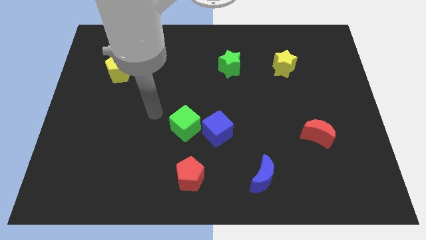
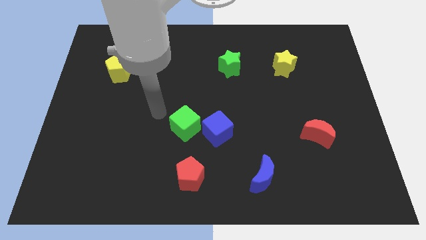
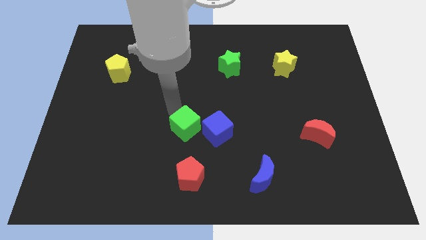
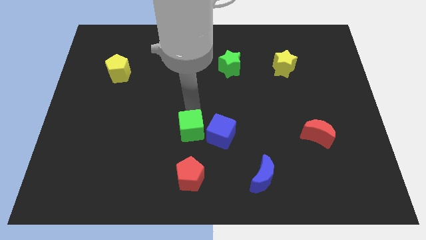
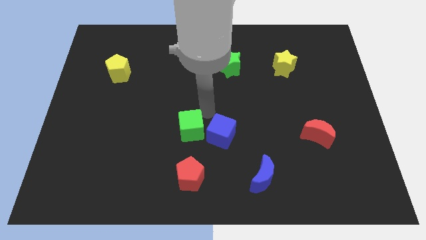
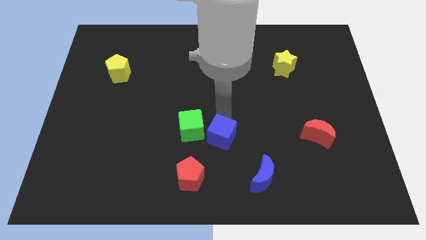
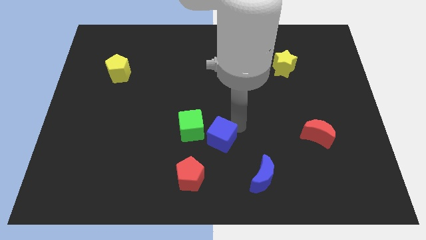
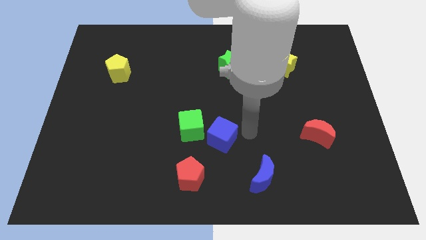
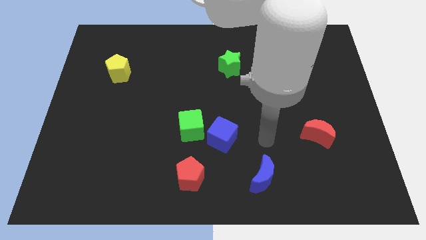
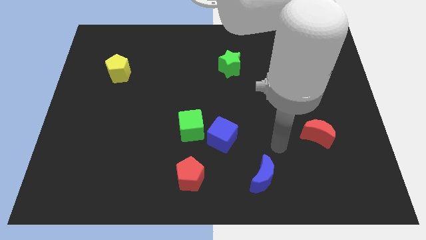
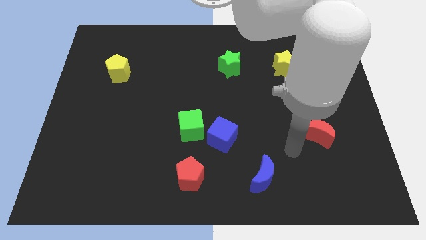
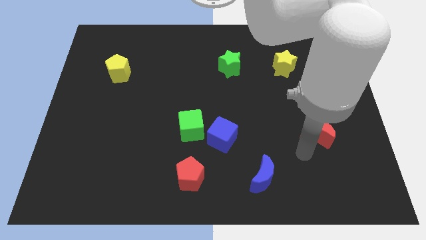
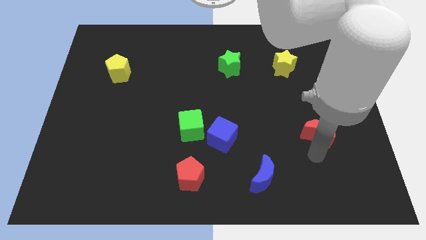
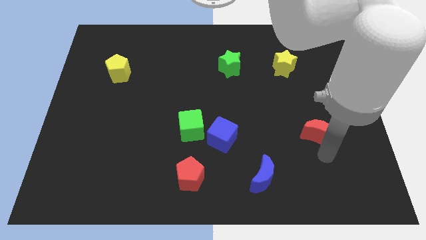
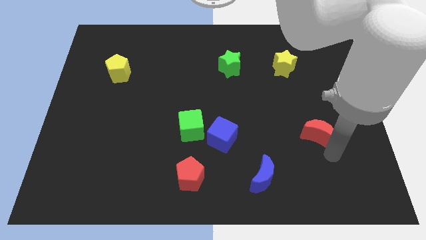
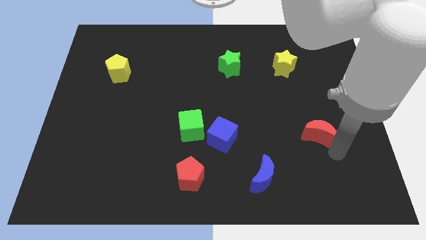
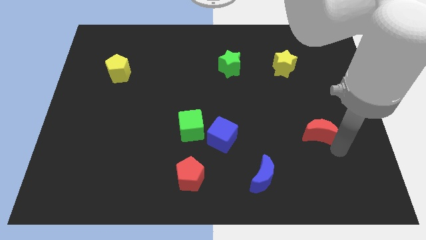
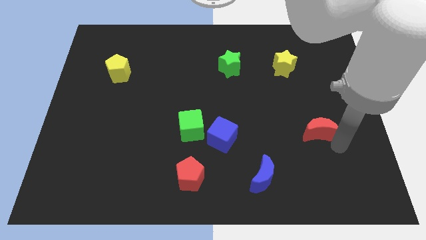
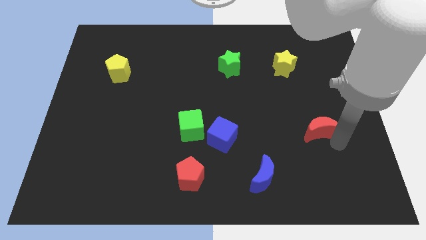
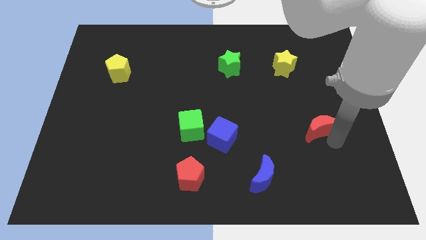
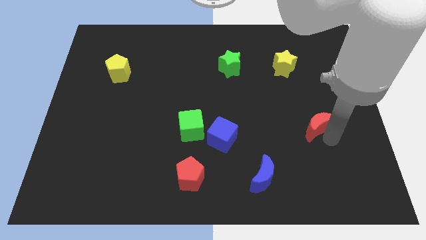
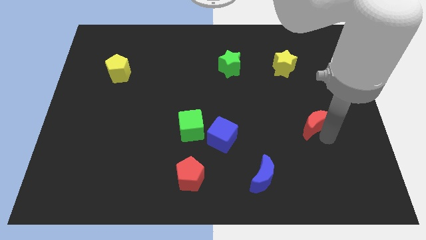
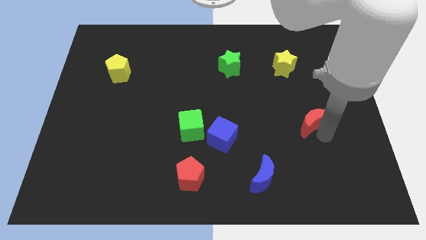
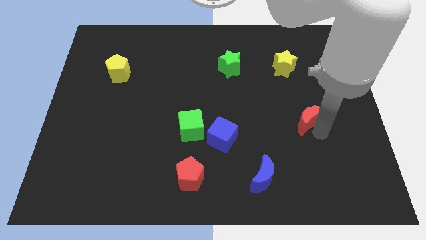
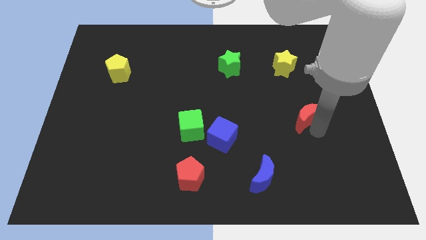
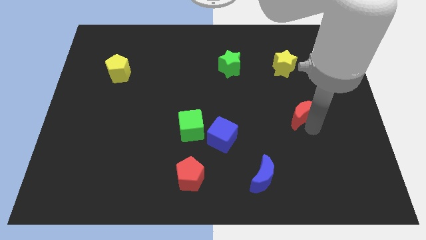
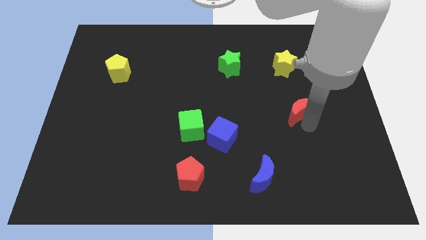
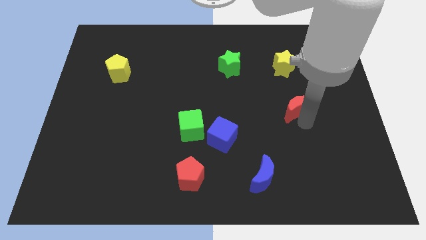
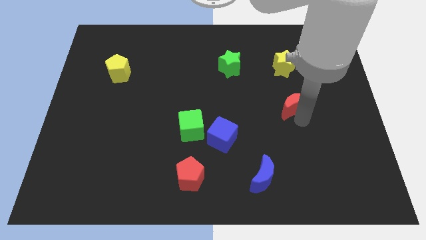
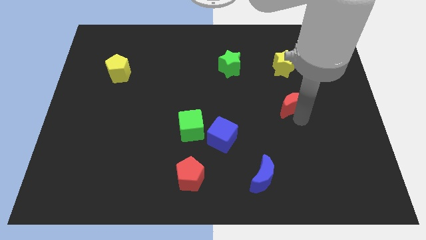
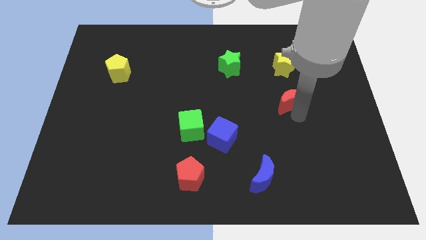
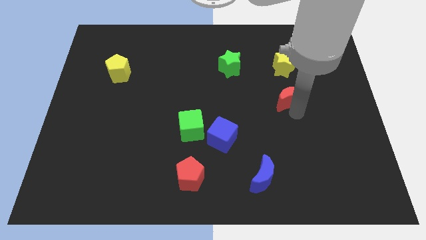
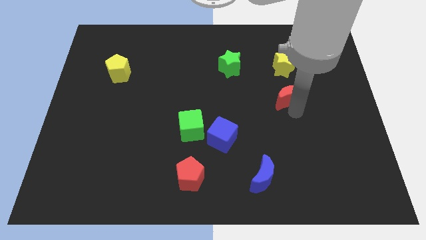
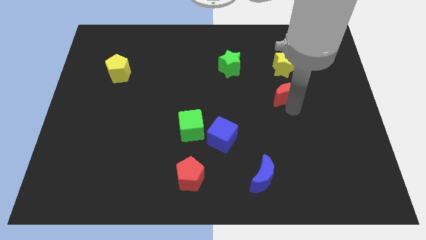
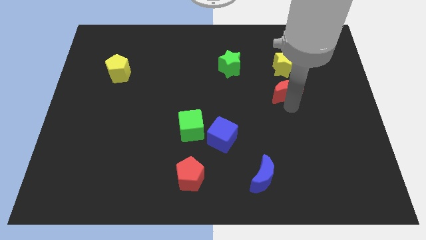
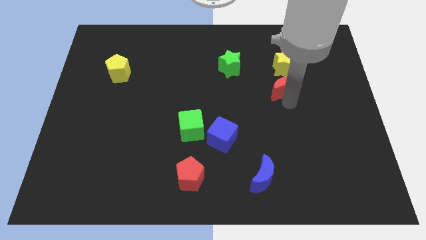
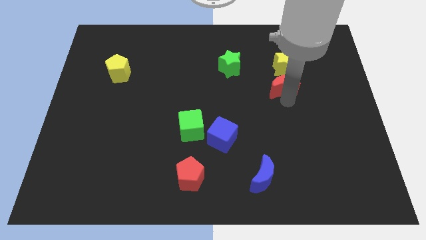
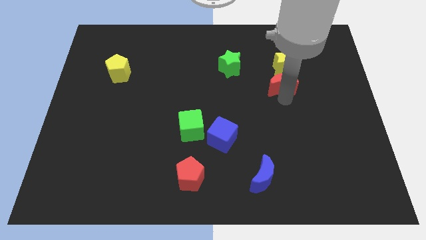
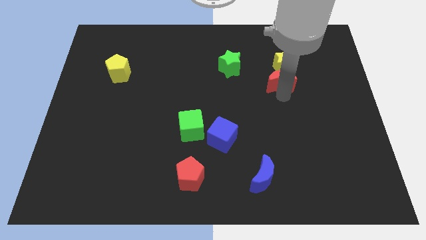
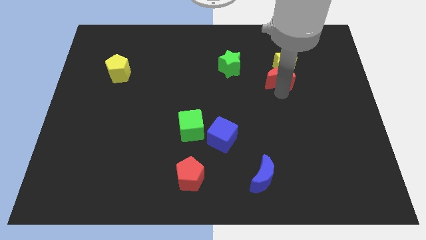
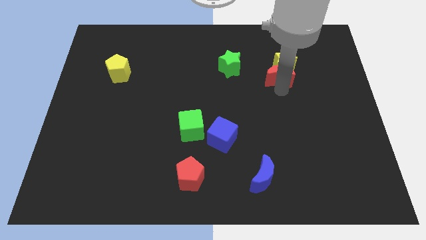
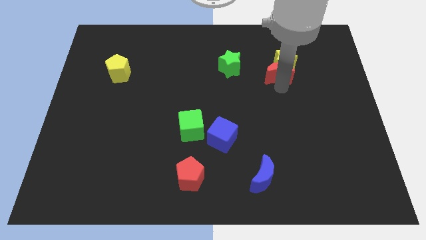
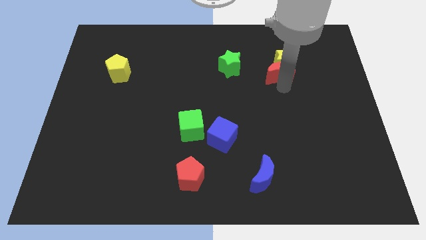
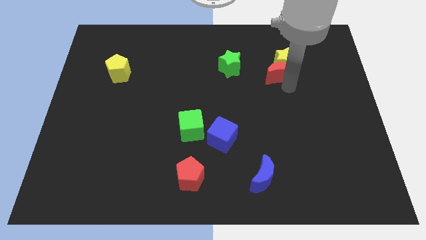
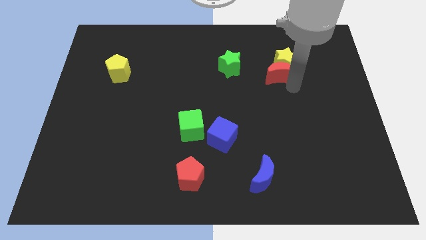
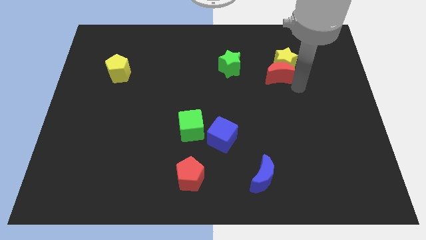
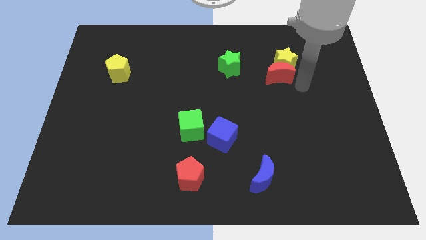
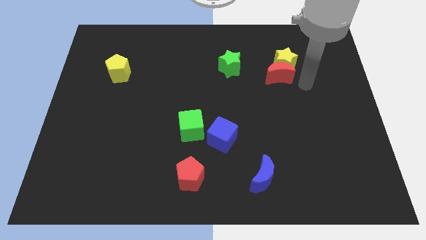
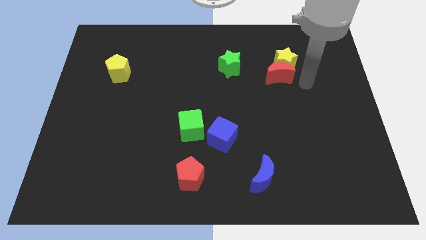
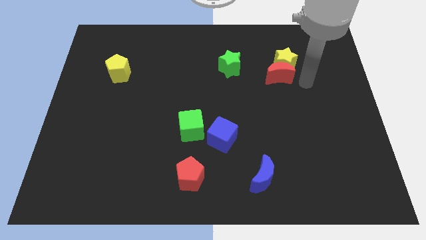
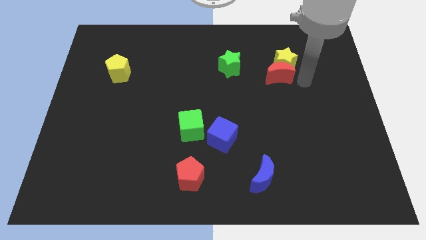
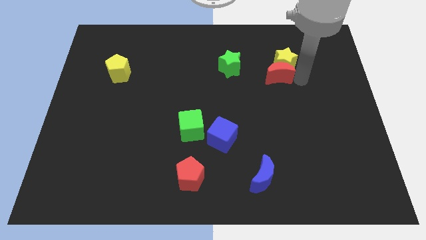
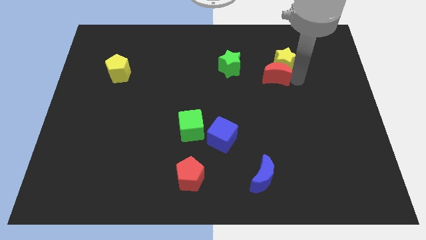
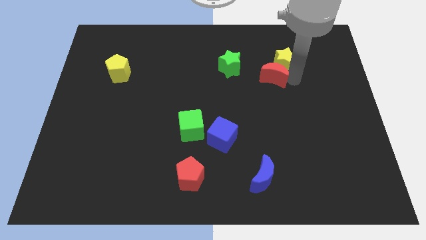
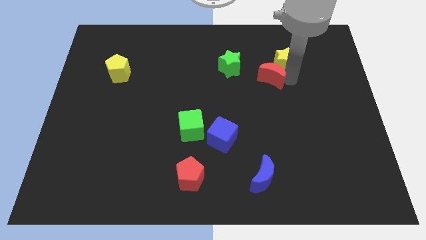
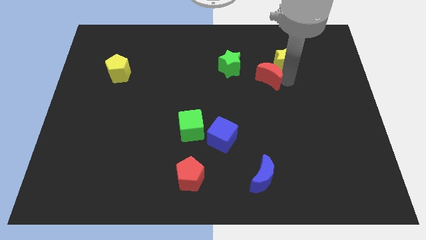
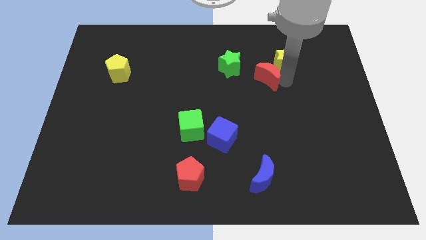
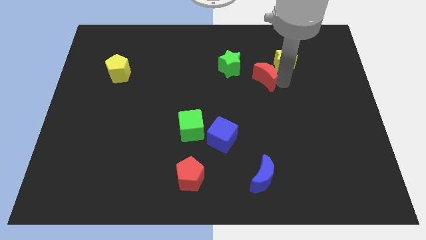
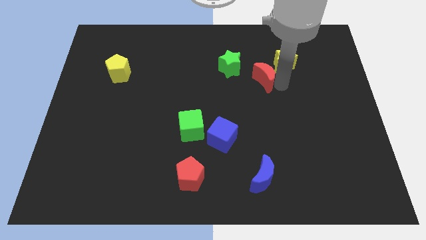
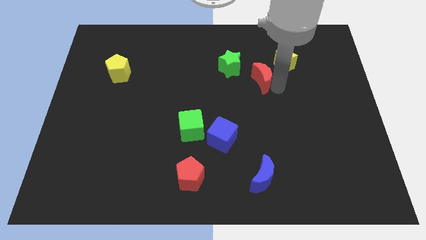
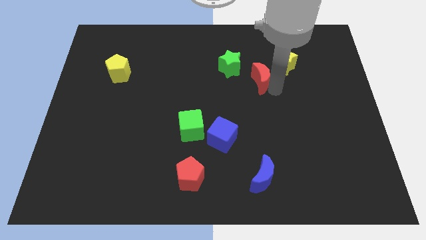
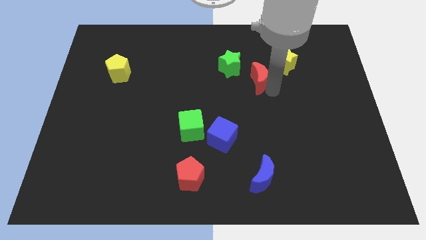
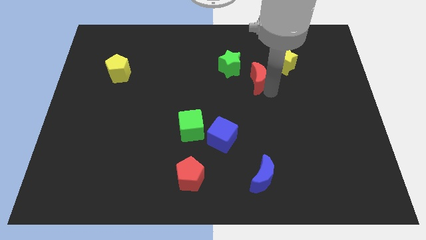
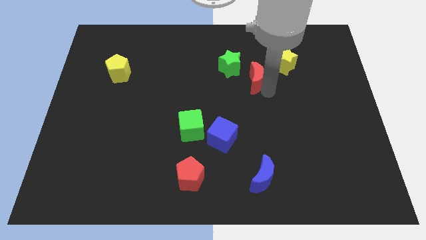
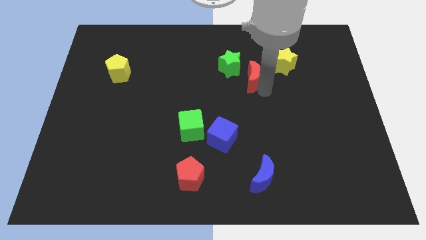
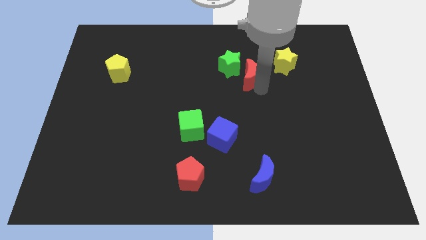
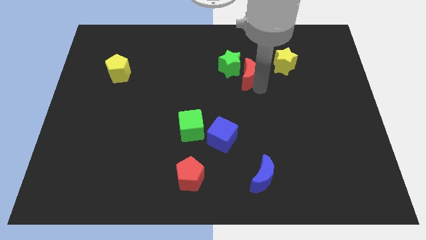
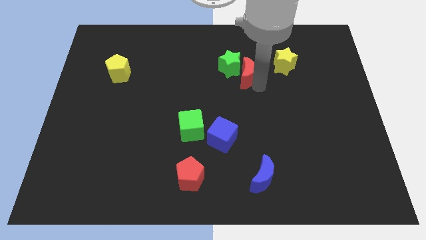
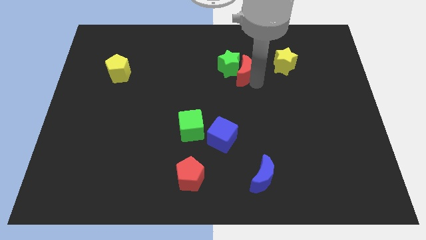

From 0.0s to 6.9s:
push the red moon next to the green star

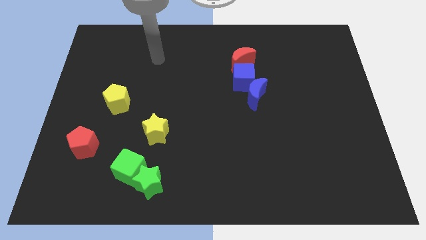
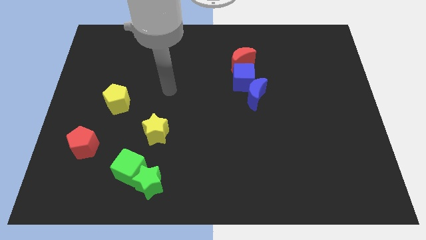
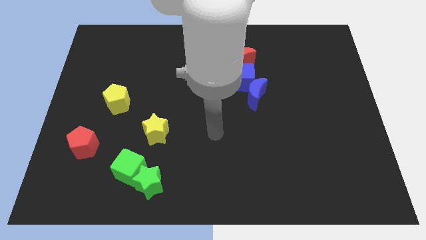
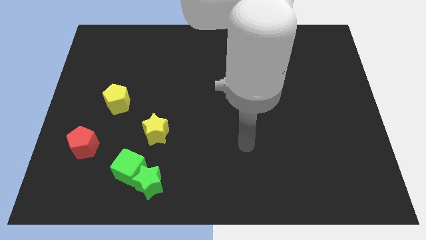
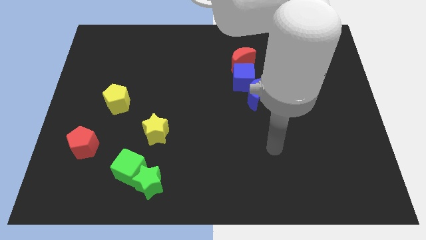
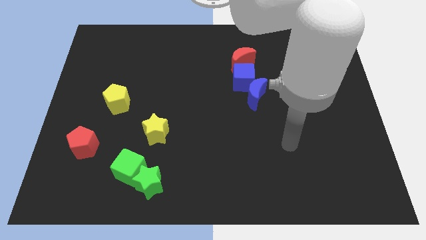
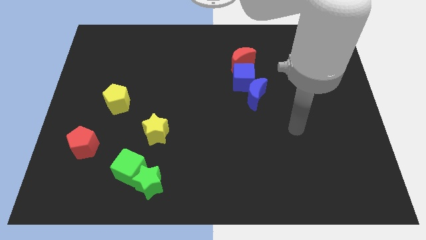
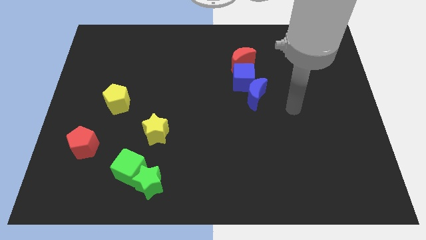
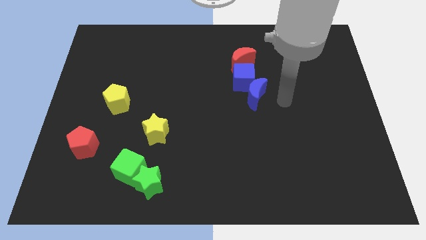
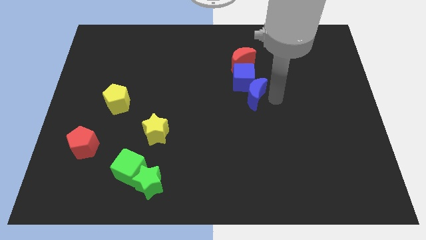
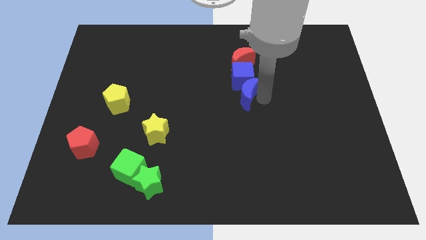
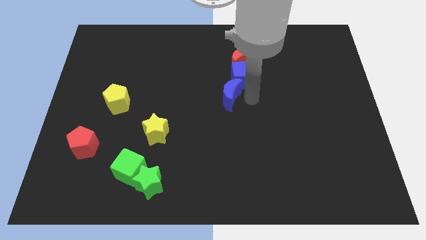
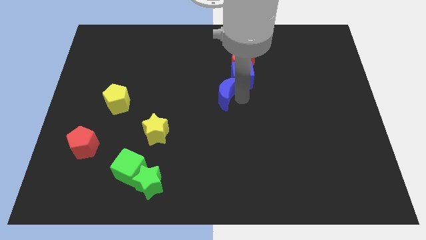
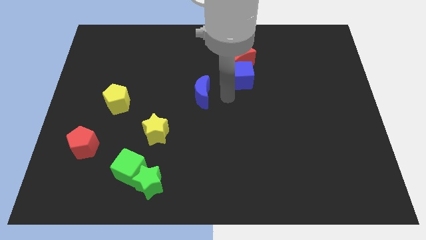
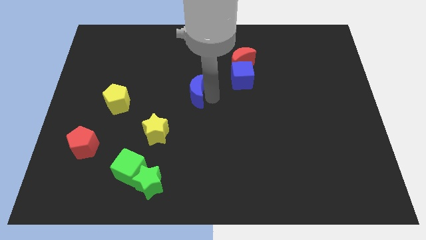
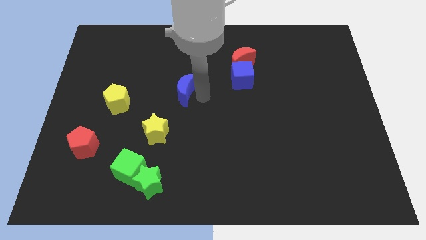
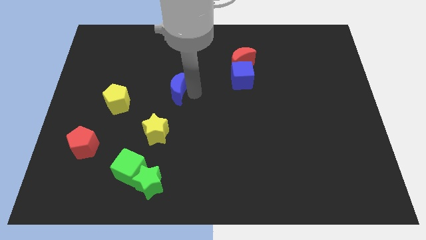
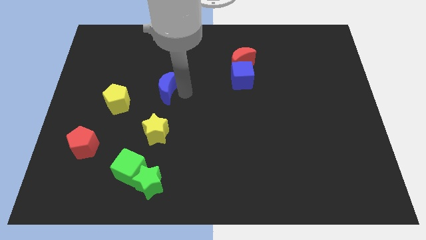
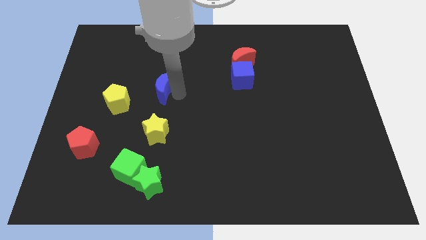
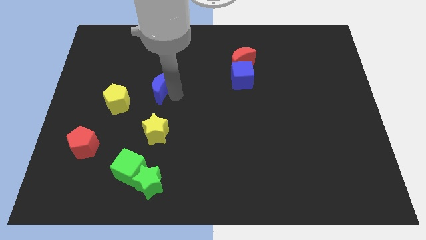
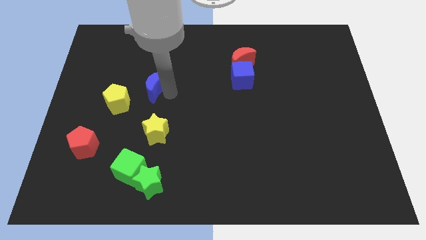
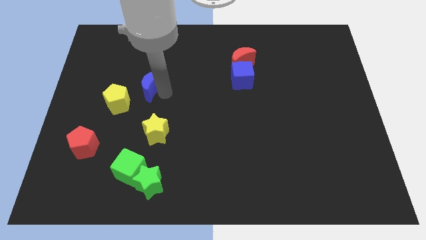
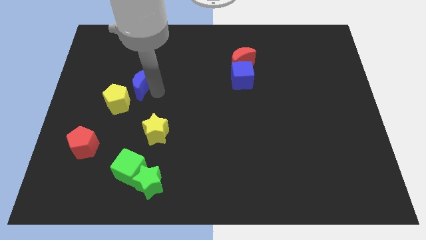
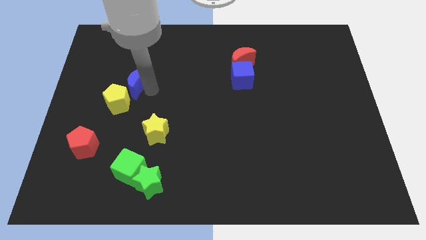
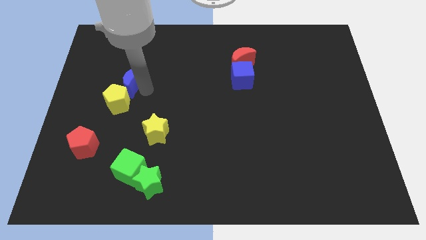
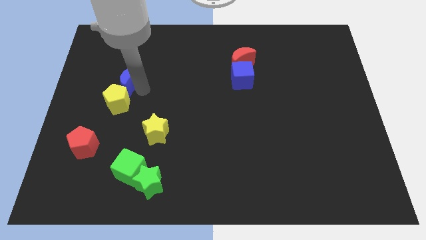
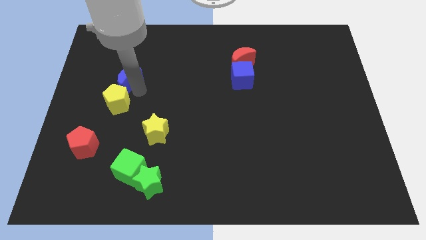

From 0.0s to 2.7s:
put the blue moon to the yellow pentagon
